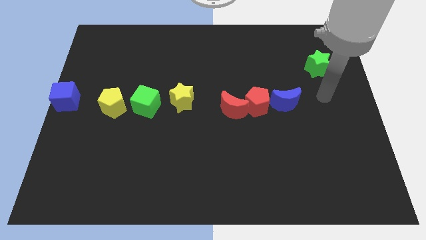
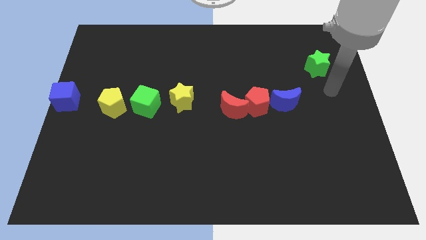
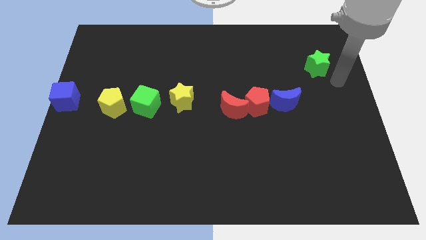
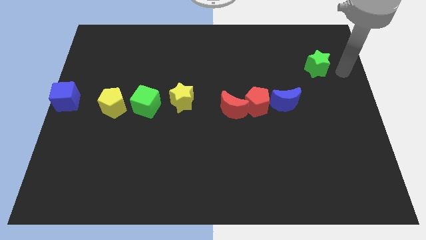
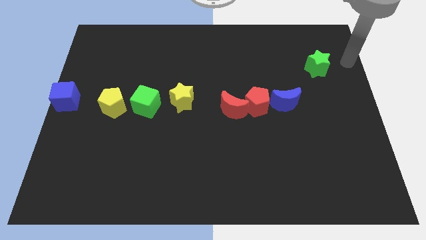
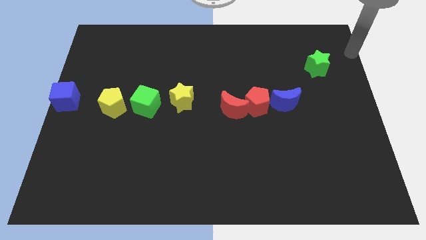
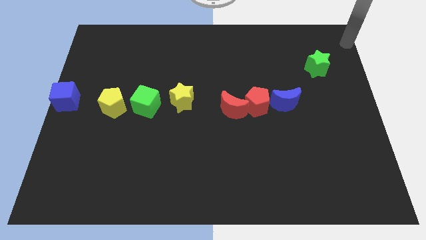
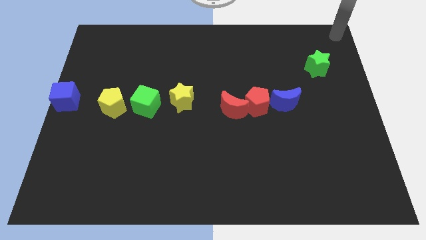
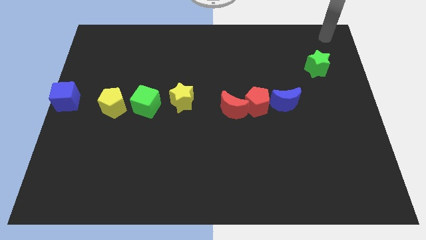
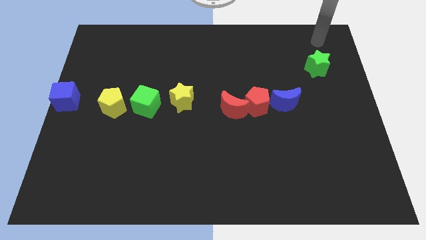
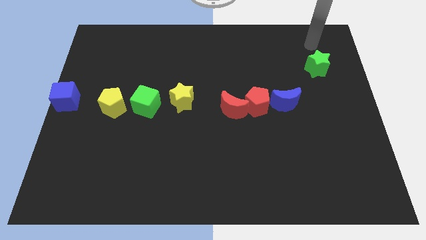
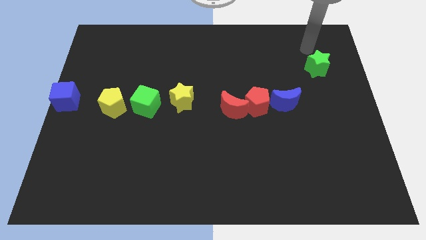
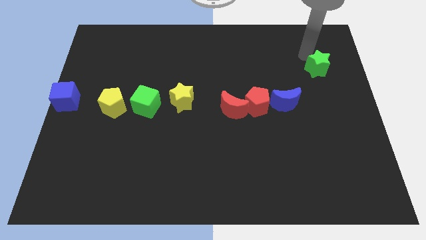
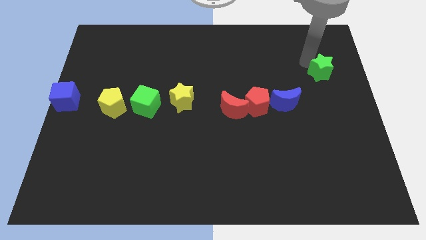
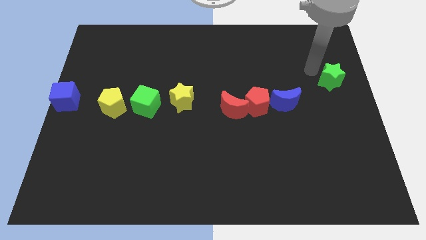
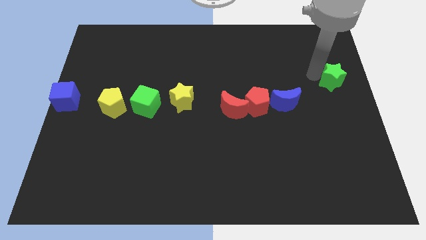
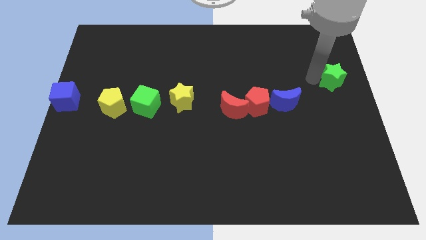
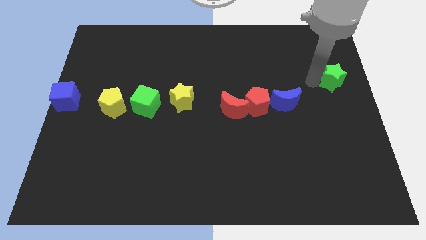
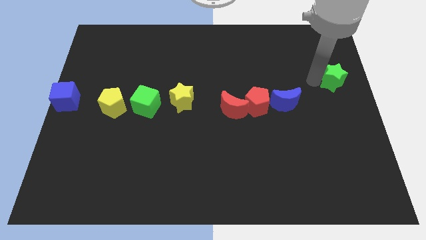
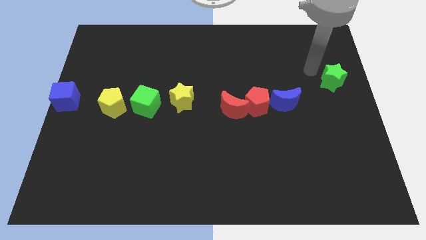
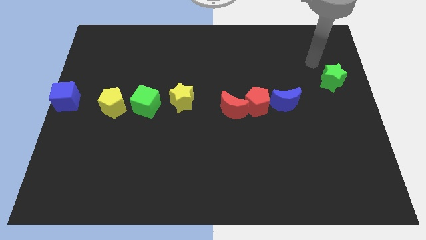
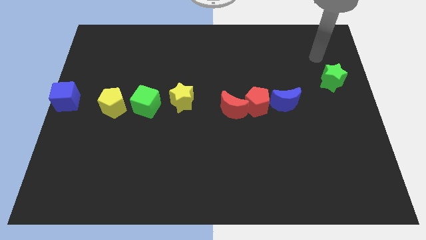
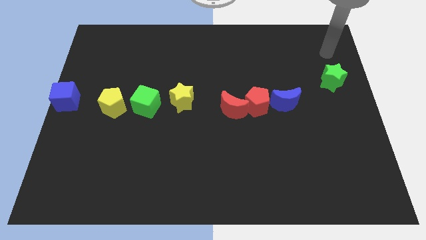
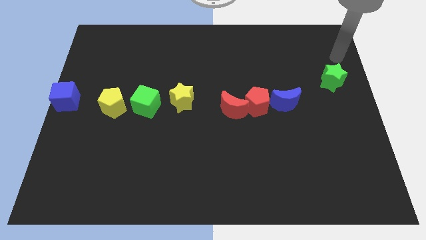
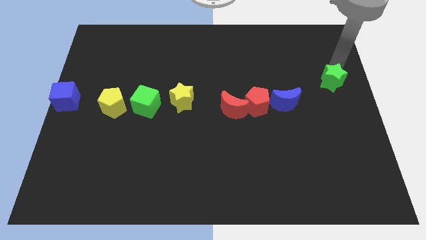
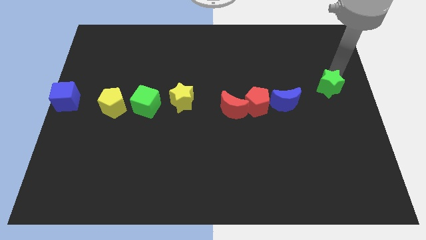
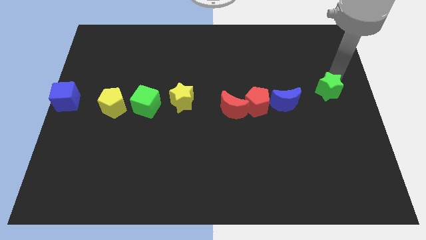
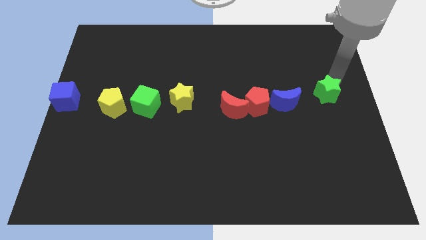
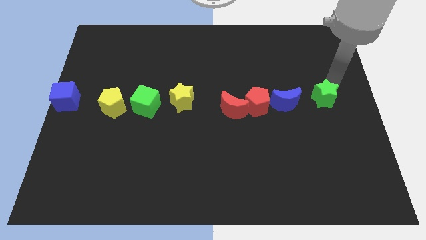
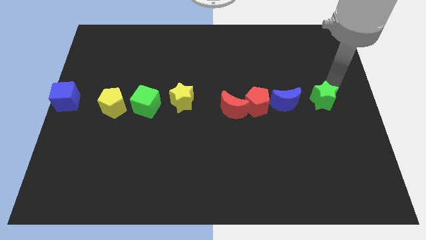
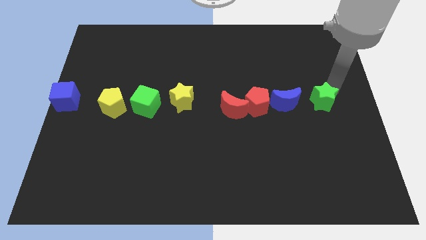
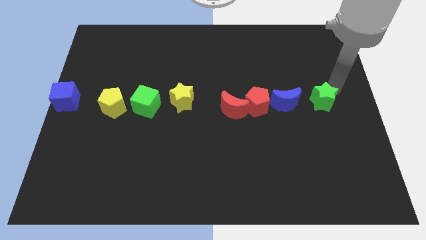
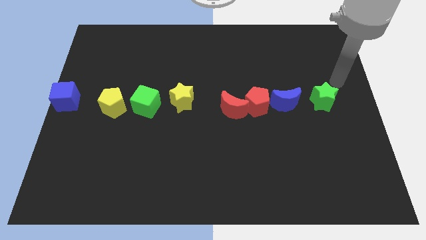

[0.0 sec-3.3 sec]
place the green star to the right of the blue crescent

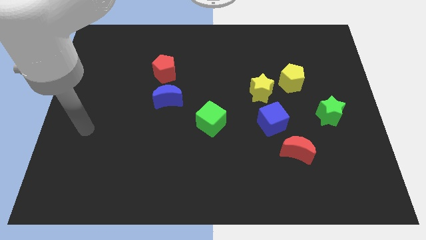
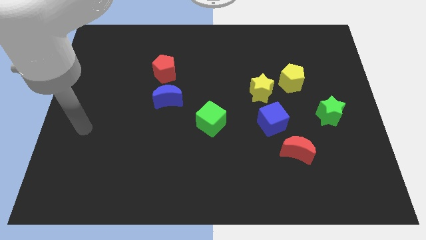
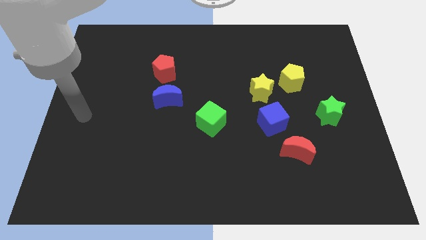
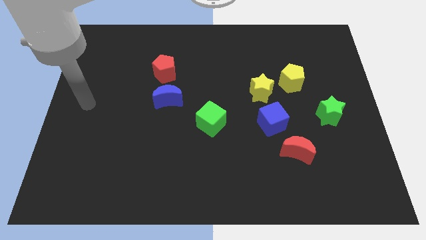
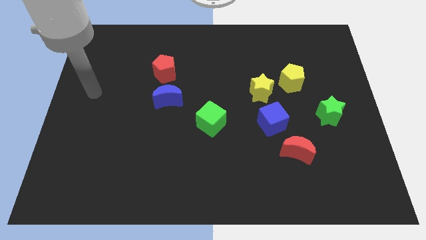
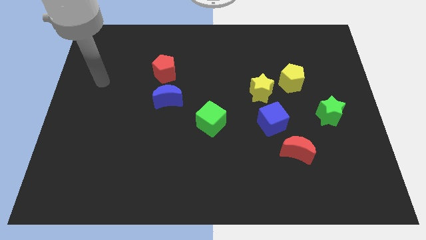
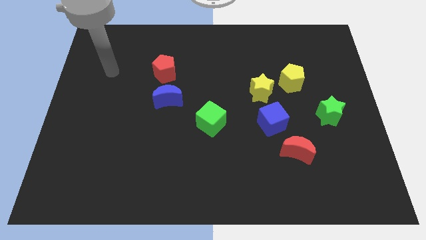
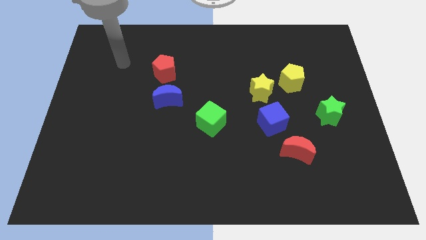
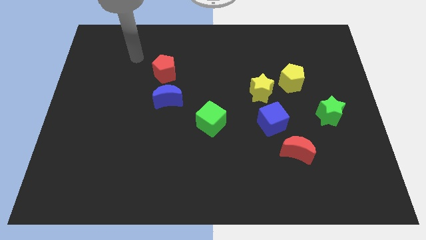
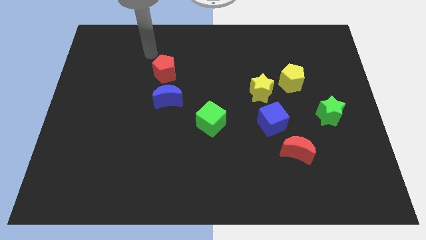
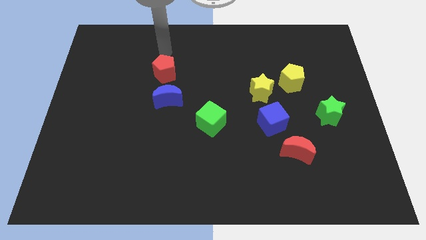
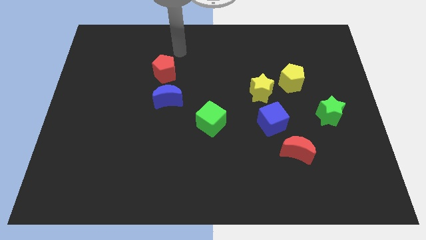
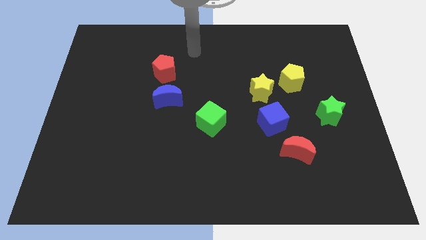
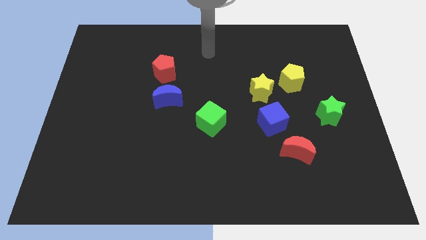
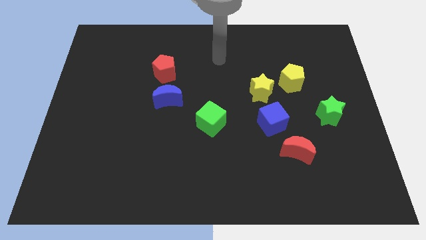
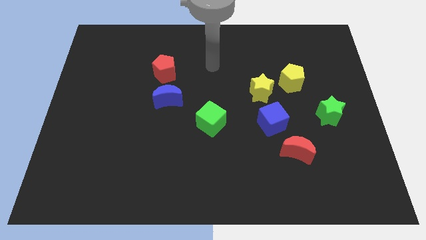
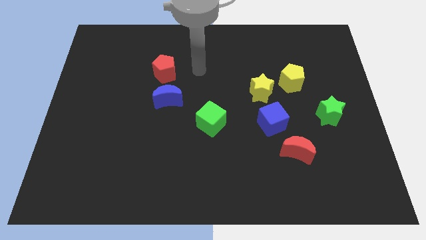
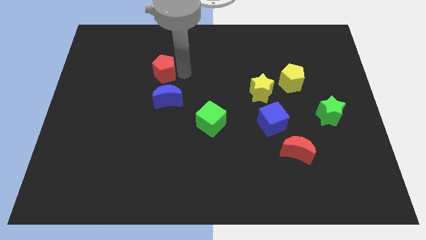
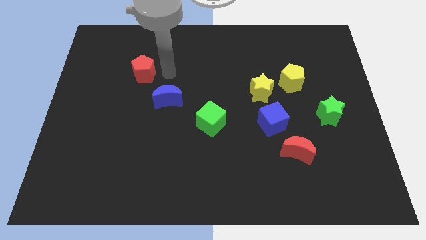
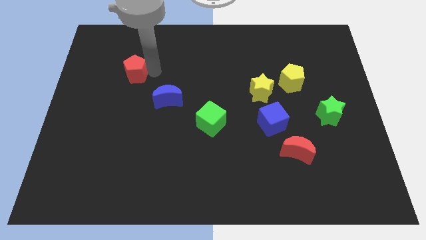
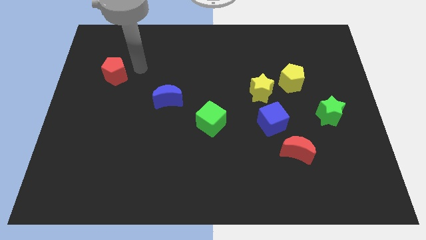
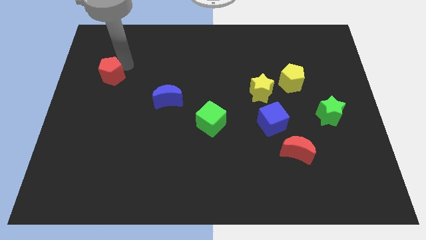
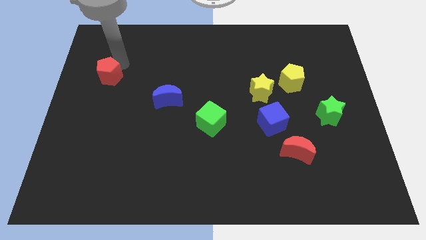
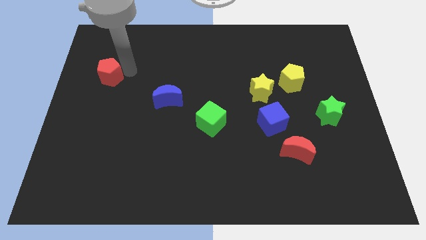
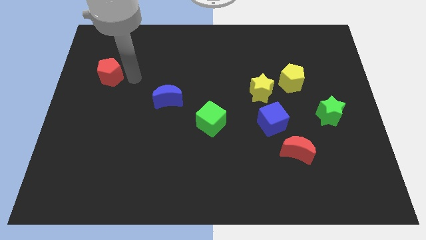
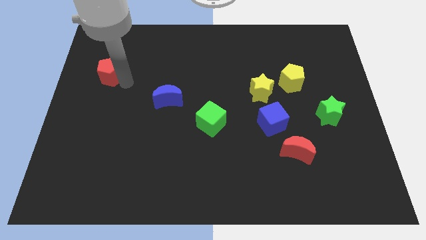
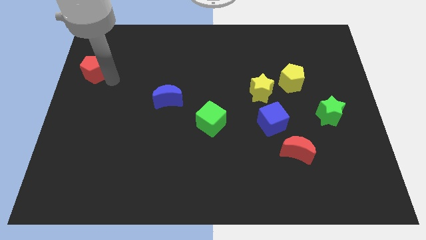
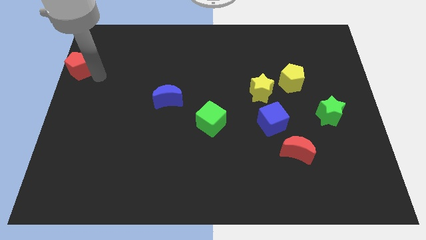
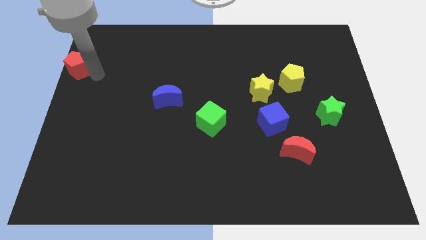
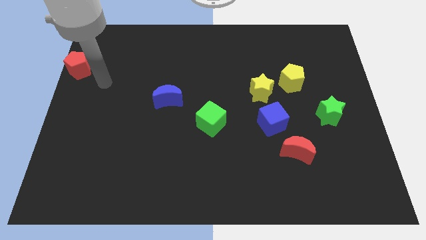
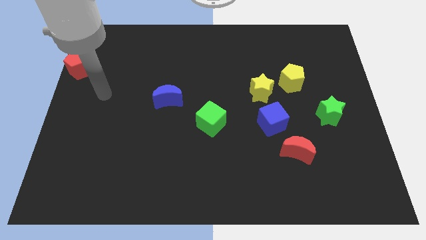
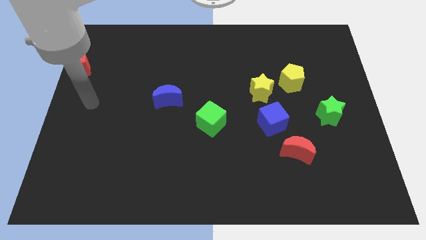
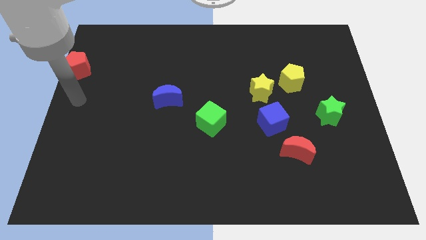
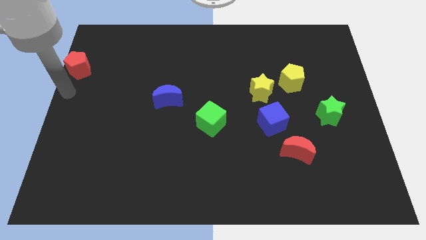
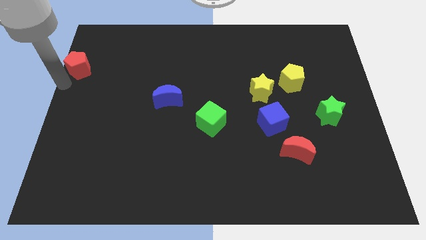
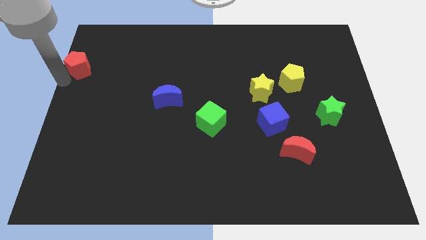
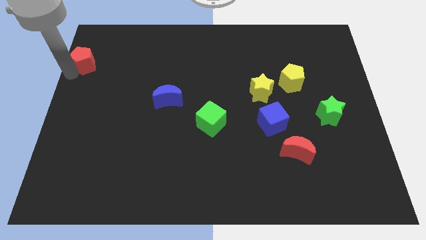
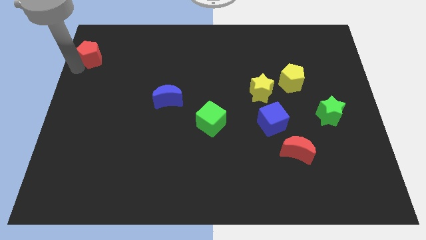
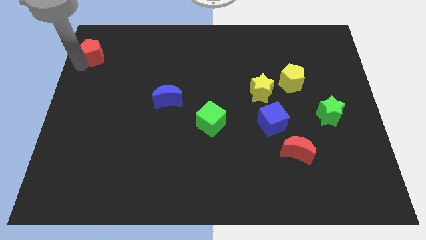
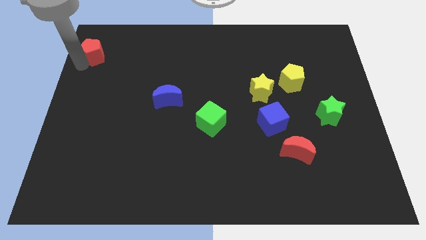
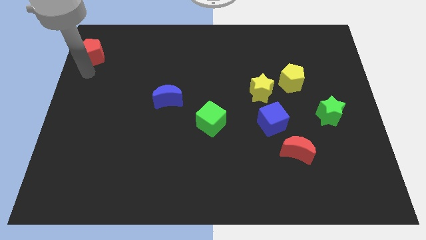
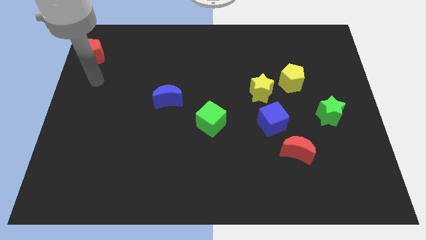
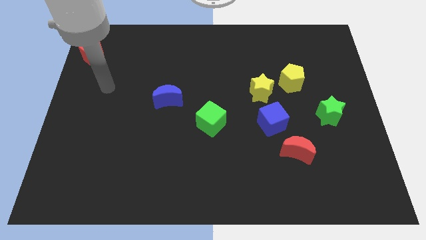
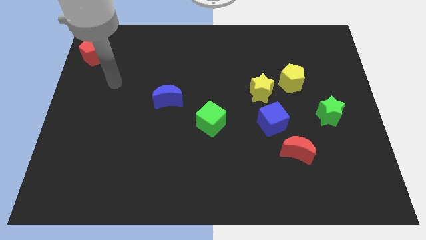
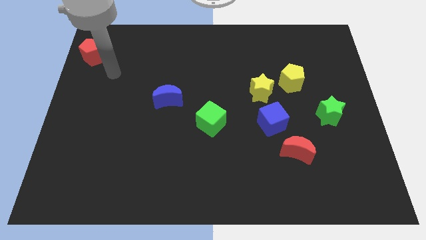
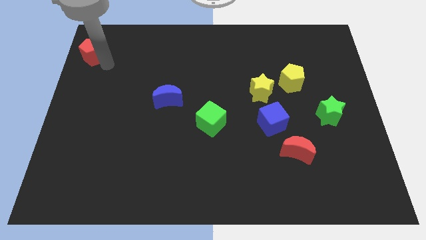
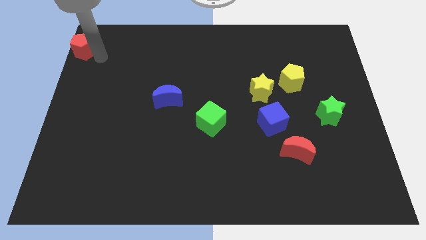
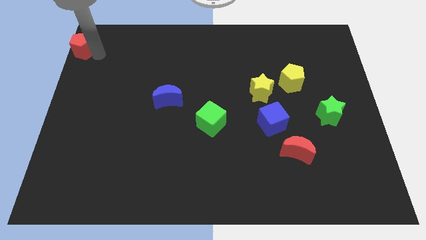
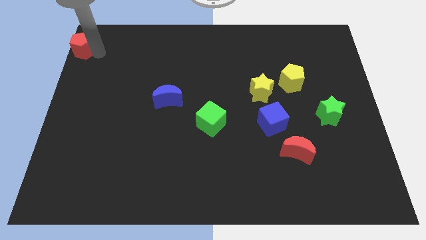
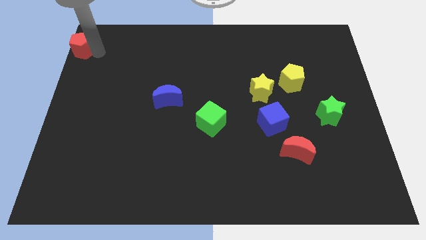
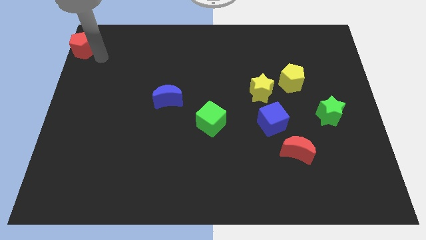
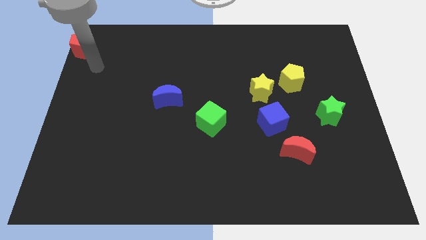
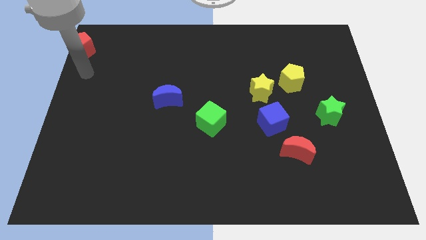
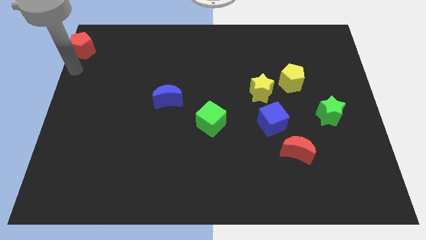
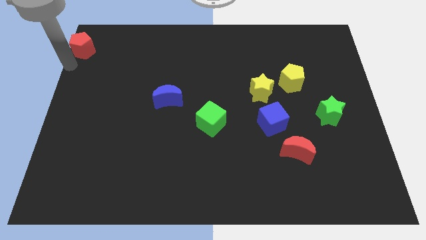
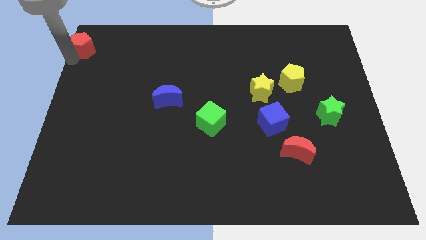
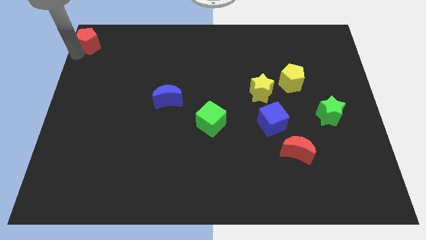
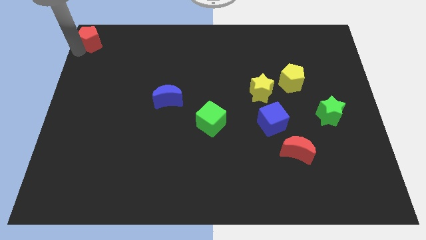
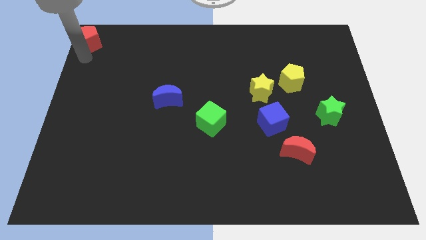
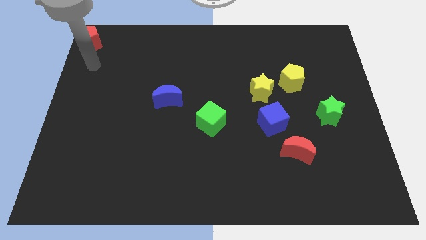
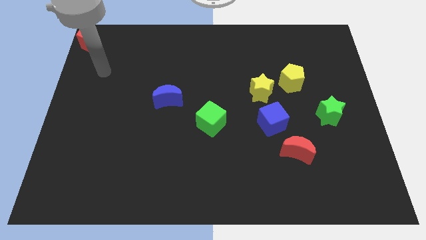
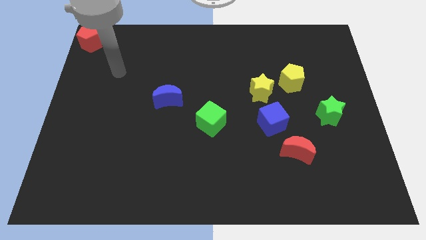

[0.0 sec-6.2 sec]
push red pentagon to the top left corner
